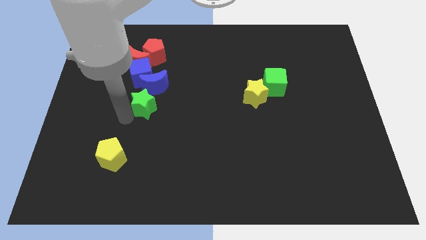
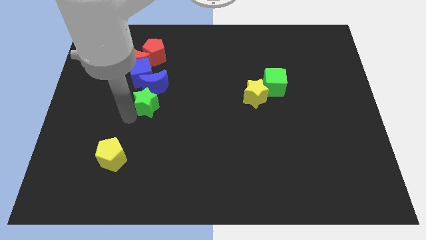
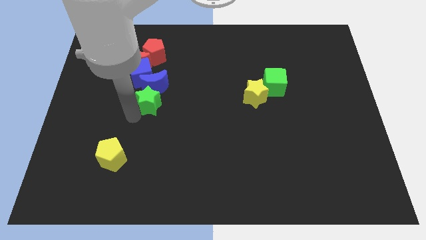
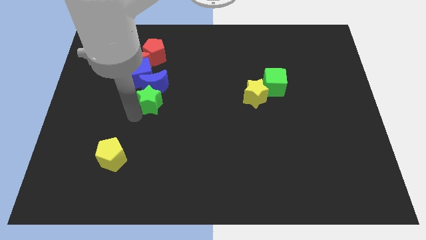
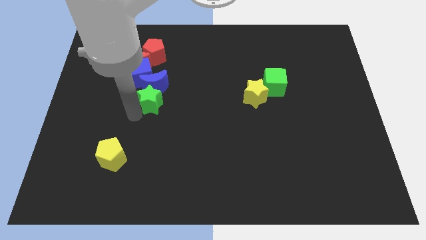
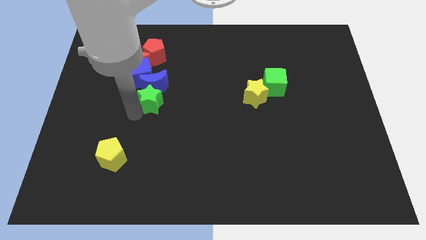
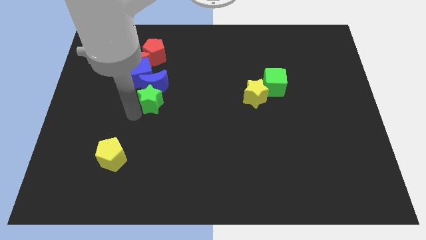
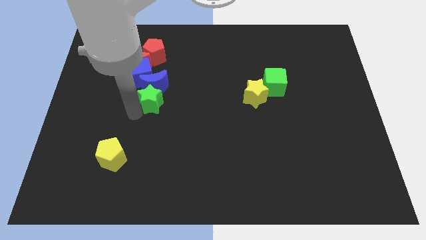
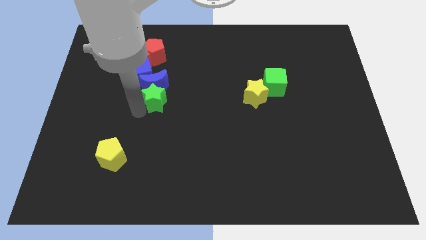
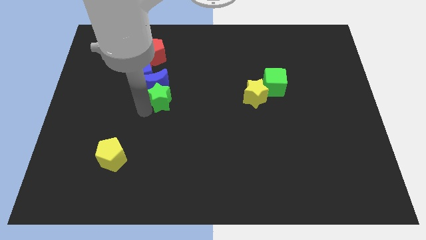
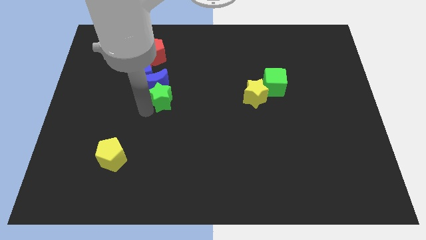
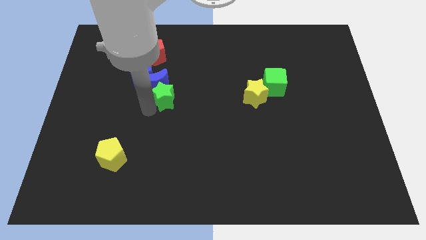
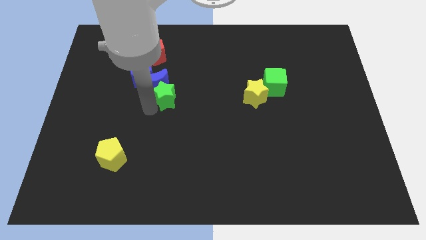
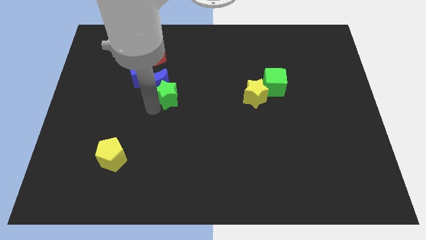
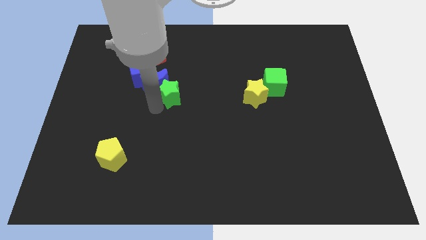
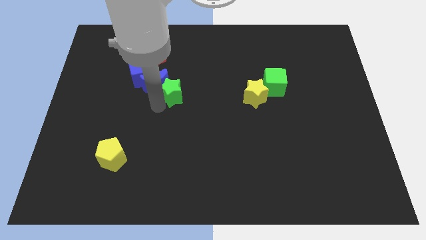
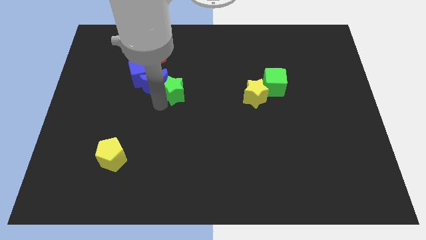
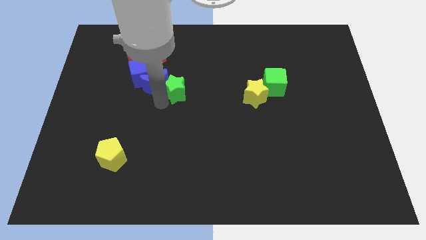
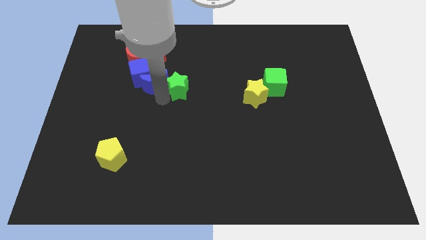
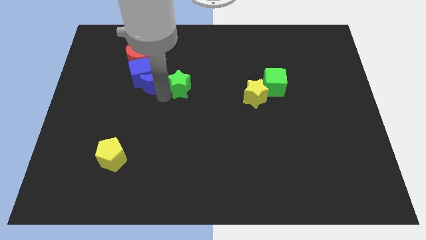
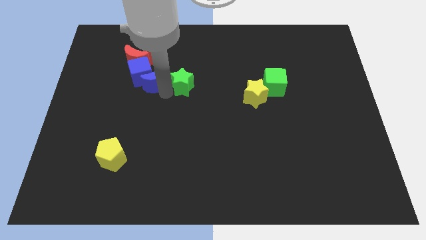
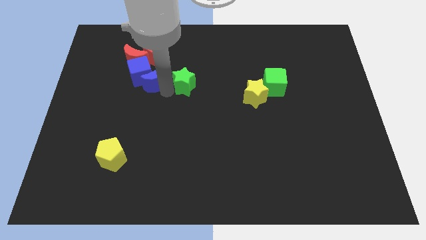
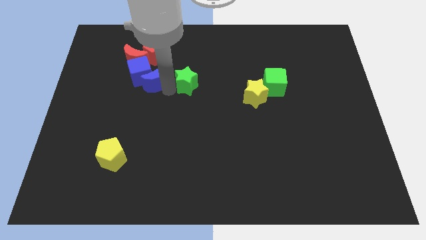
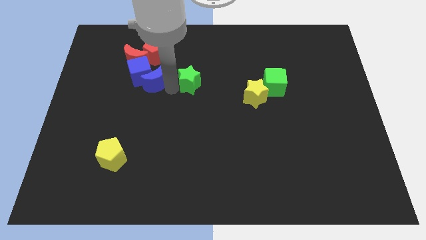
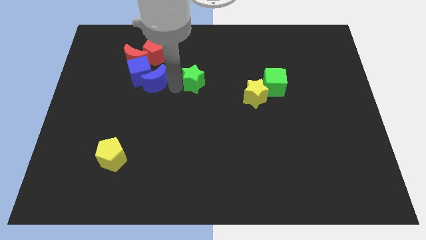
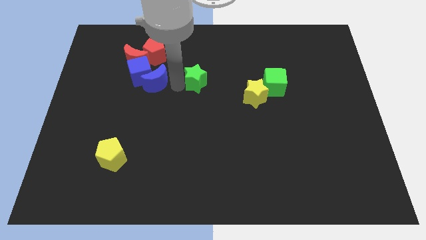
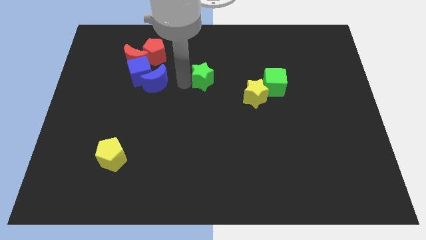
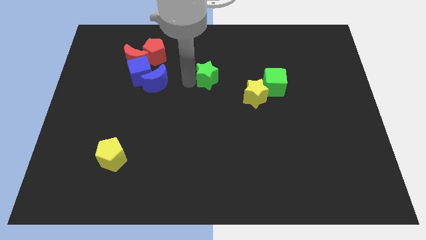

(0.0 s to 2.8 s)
place the green star right to the blue crescent

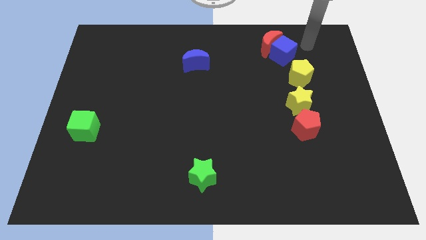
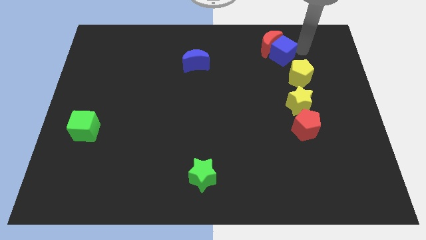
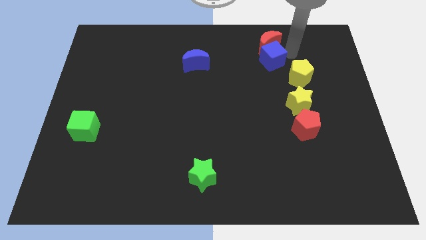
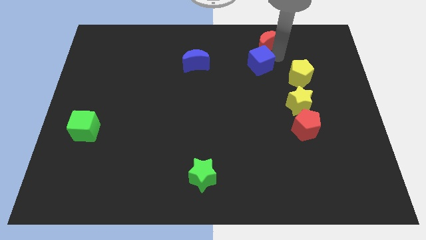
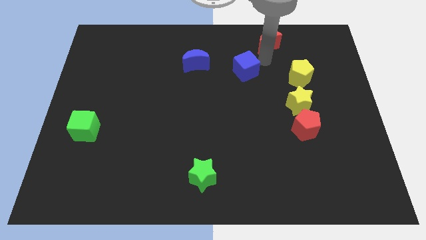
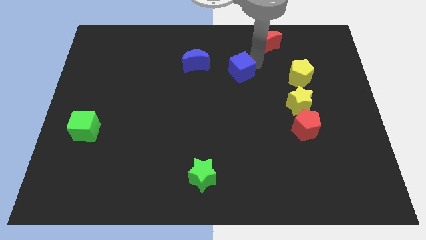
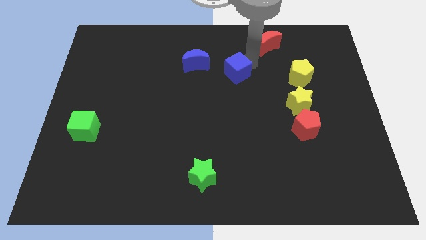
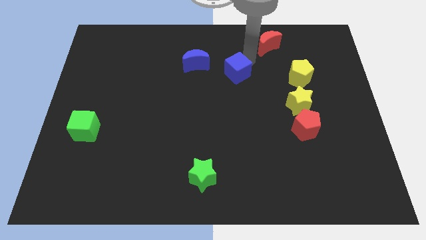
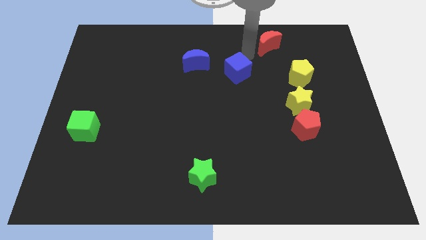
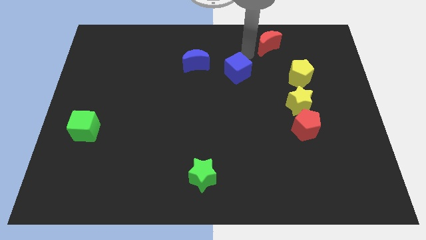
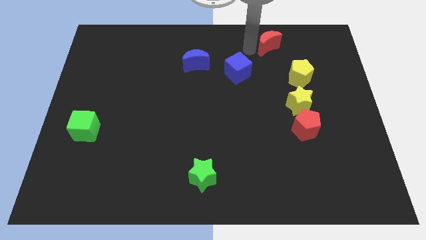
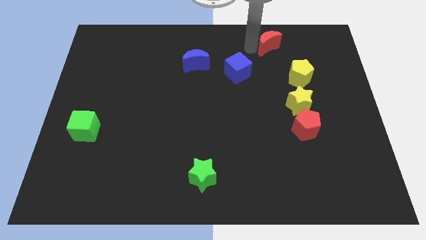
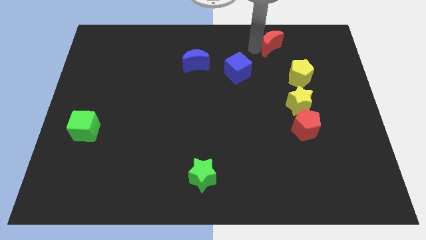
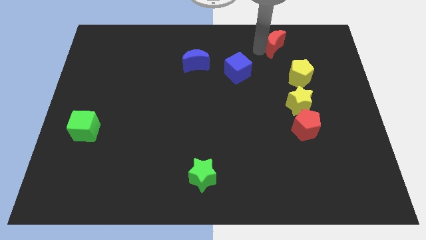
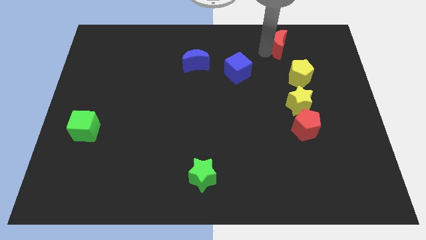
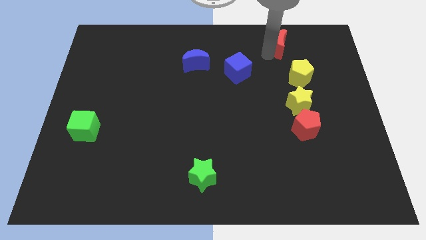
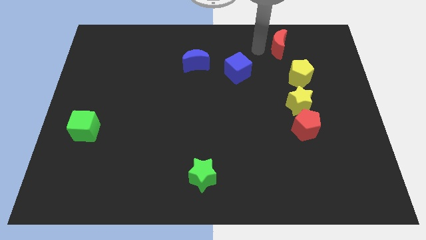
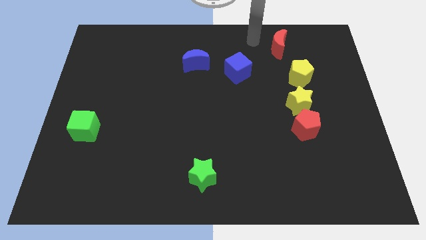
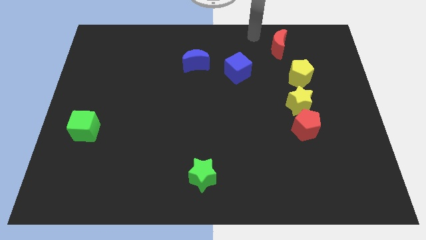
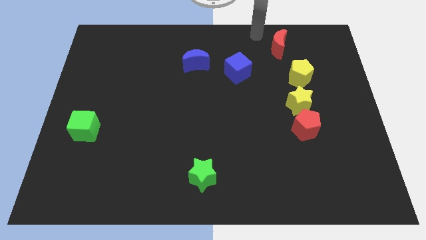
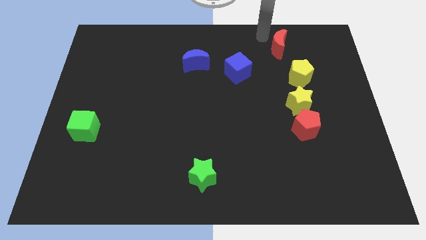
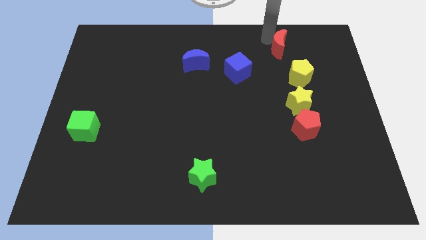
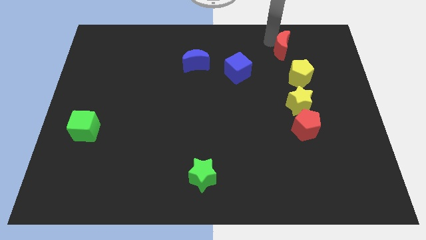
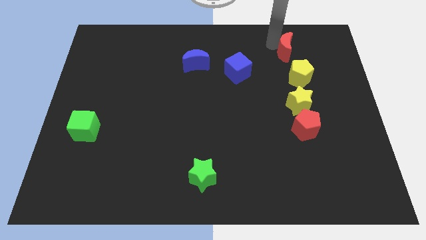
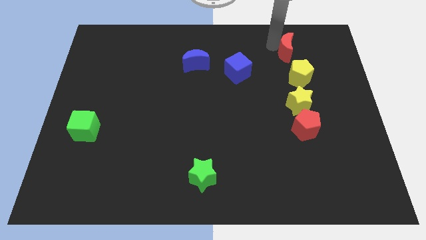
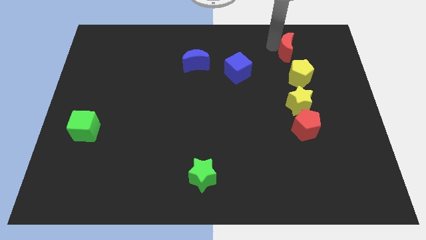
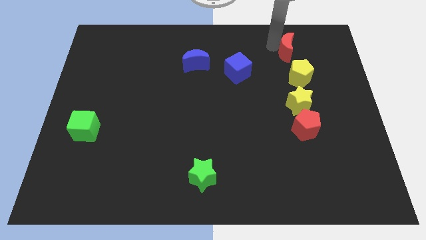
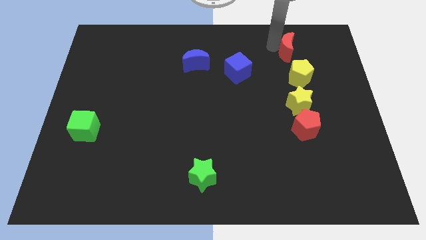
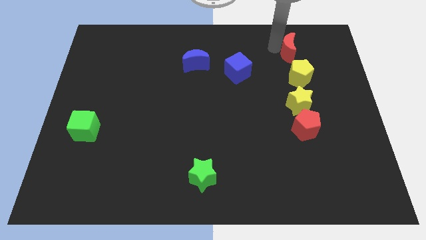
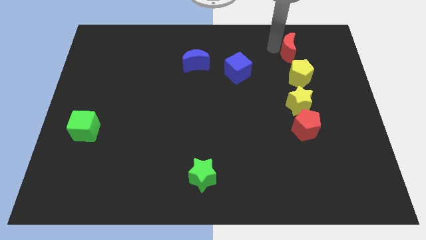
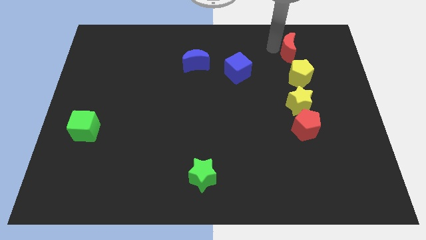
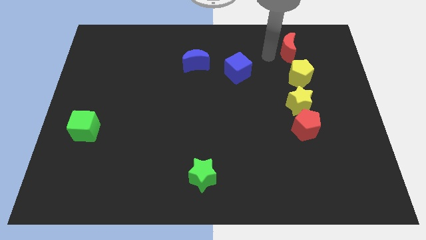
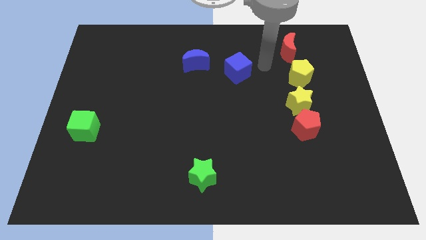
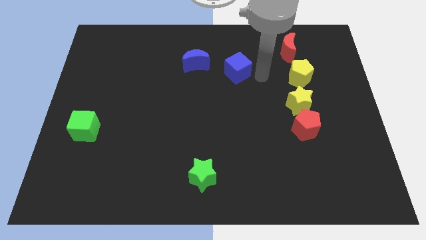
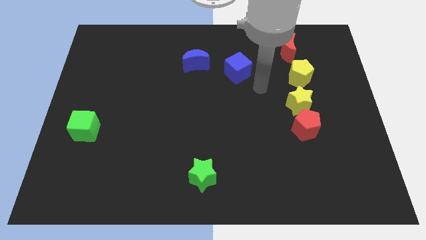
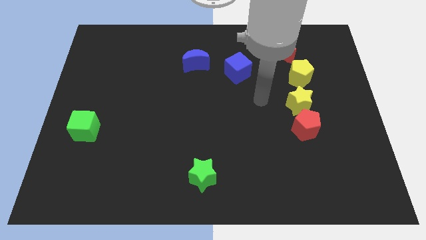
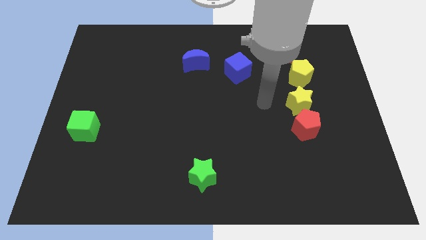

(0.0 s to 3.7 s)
separate red moon and blue cube from each other

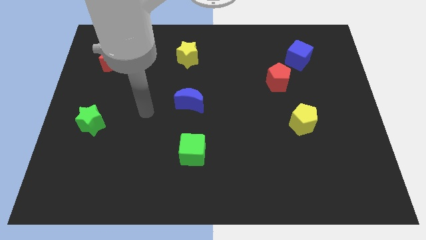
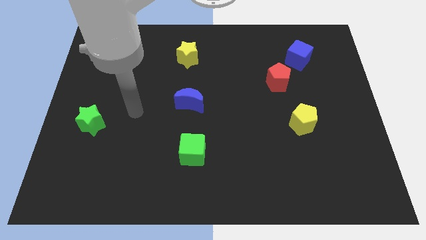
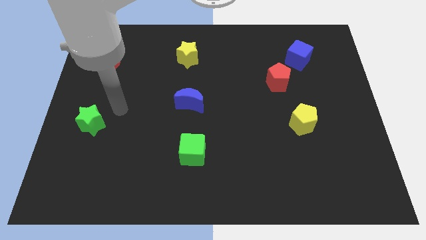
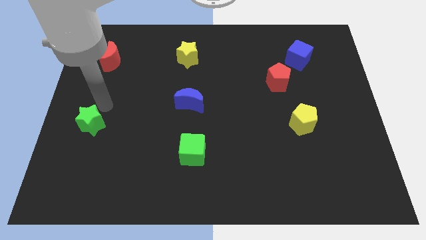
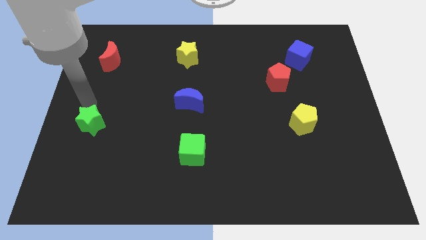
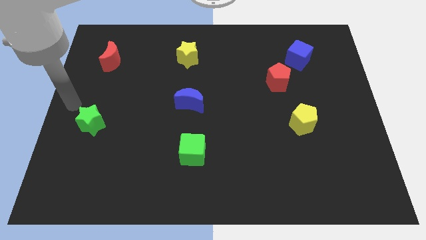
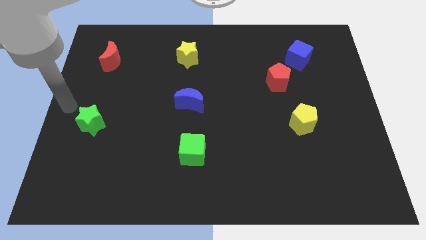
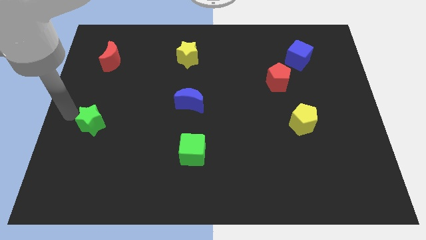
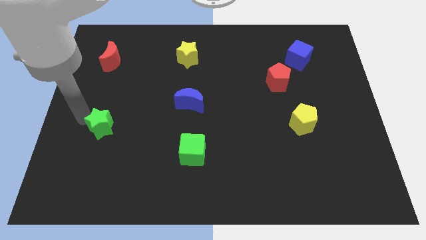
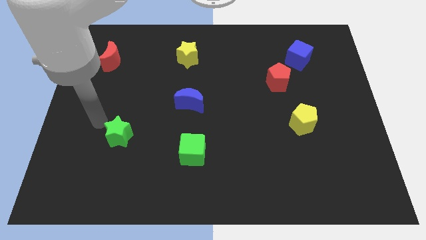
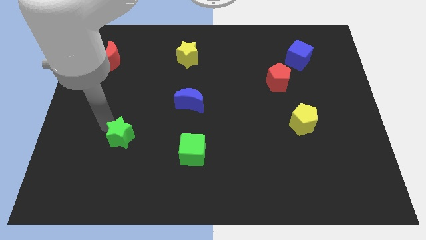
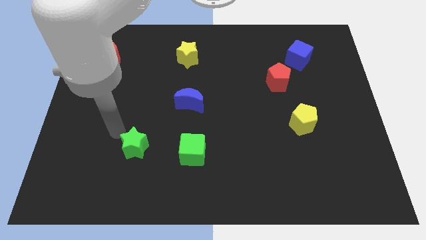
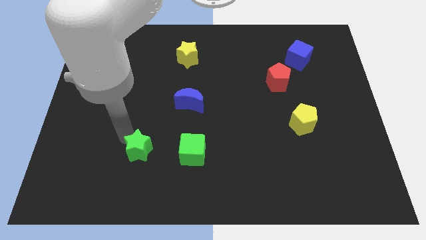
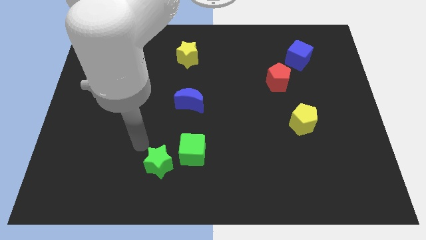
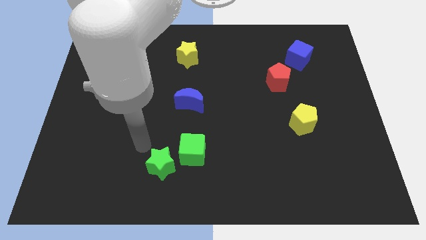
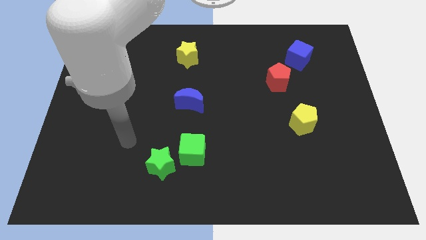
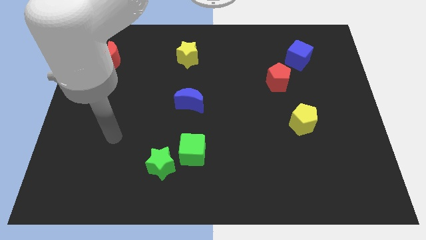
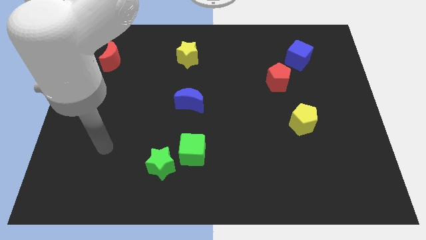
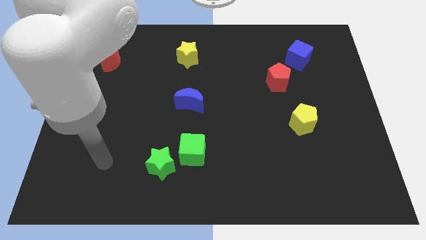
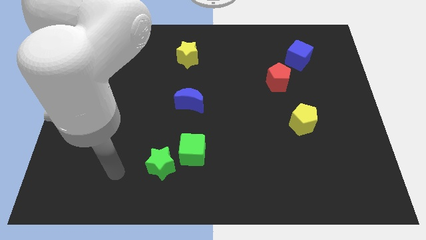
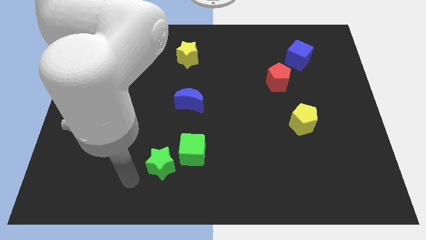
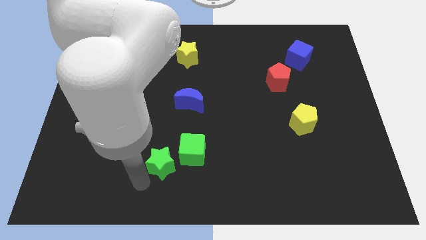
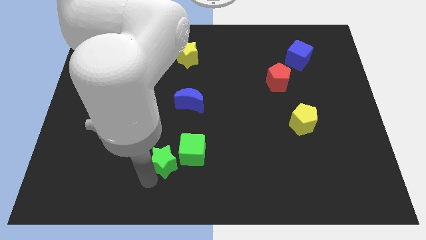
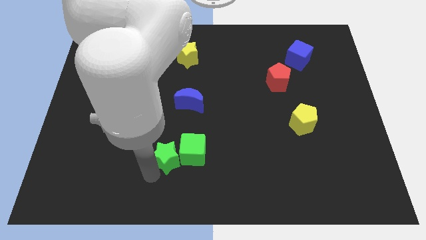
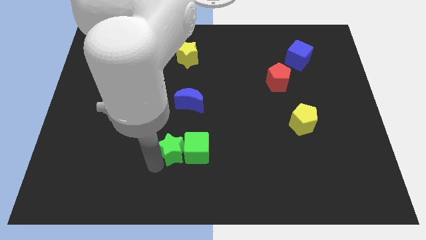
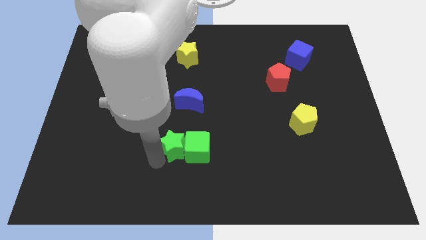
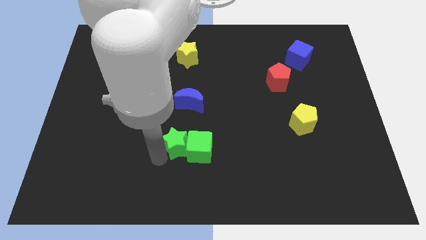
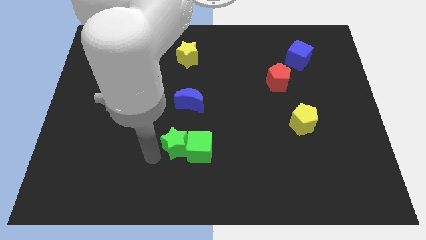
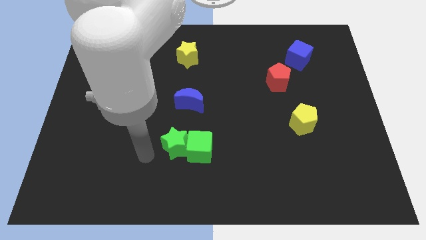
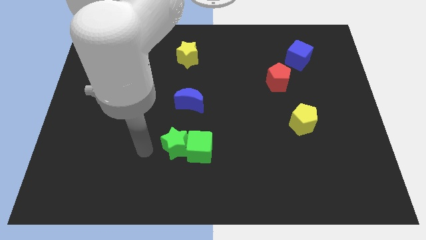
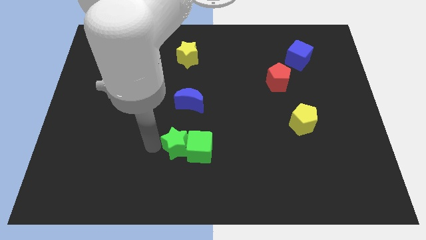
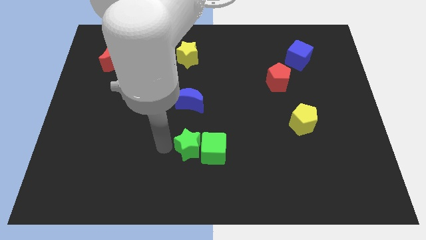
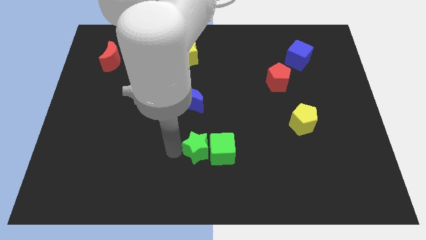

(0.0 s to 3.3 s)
move the green star into the green cube
